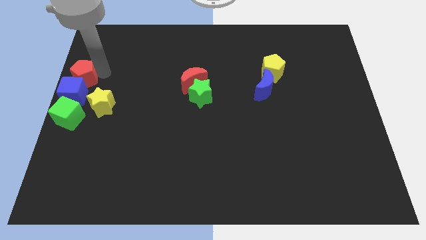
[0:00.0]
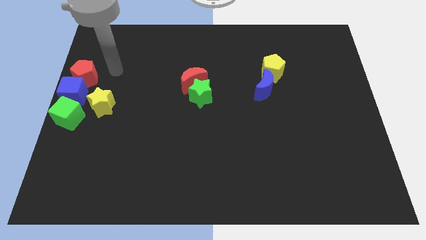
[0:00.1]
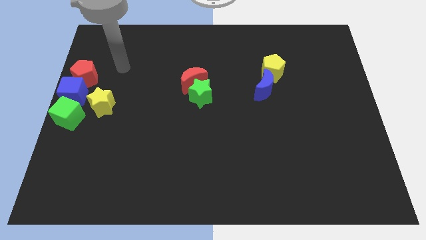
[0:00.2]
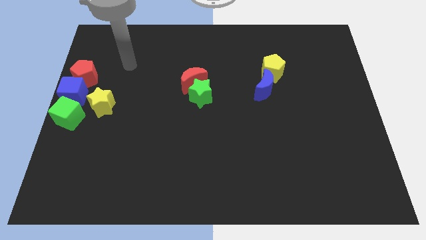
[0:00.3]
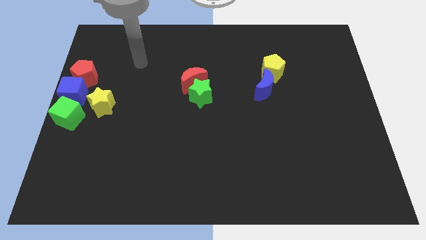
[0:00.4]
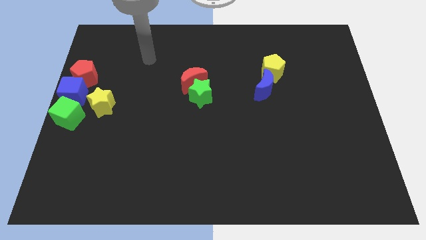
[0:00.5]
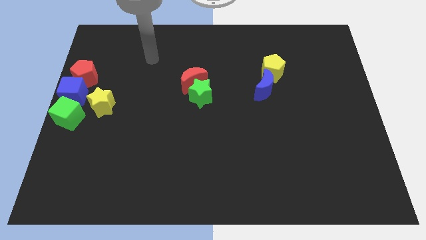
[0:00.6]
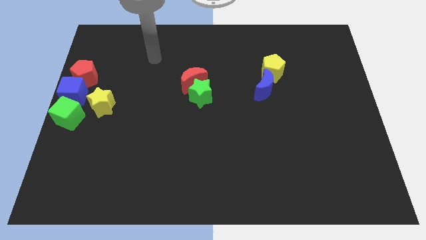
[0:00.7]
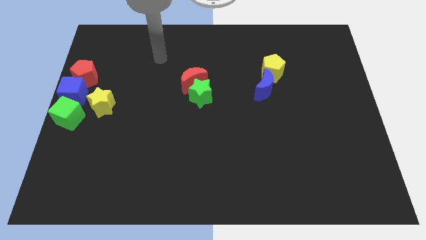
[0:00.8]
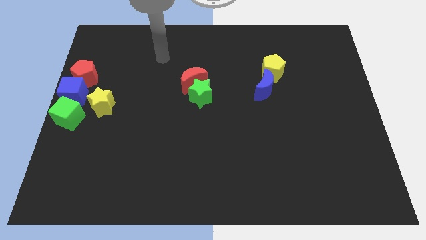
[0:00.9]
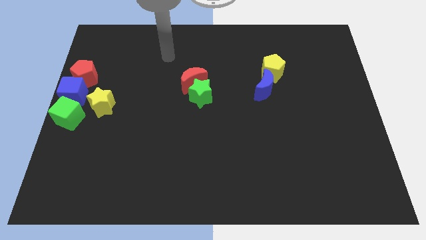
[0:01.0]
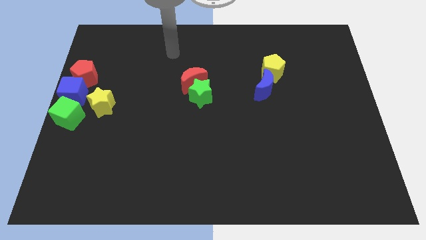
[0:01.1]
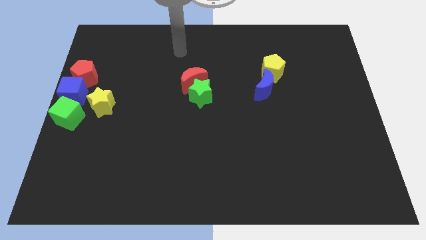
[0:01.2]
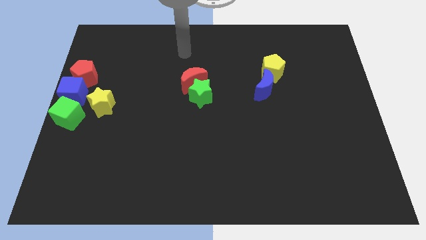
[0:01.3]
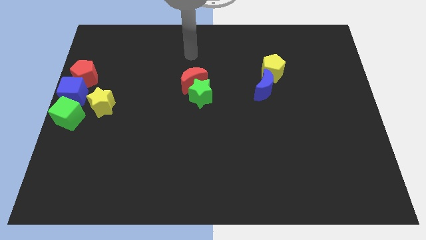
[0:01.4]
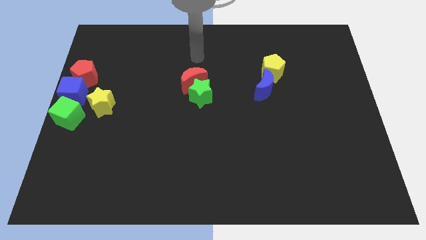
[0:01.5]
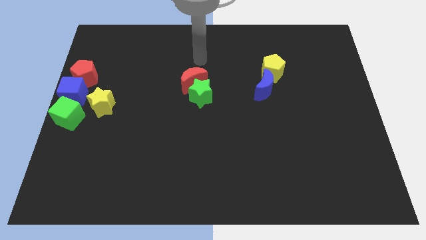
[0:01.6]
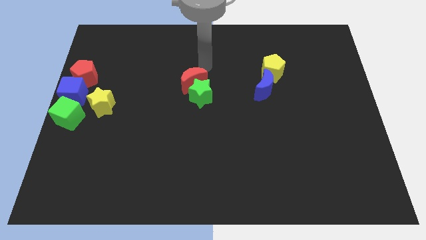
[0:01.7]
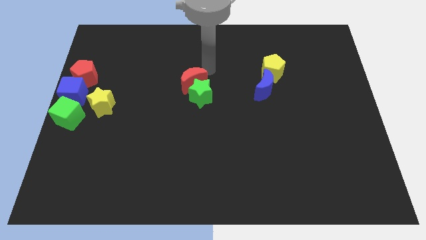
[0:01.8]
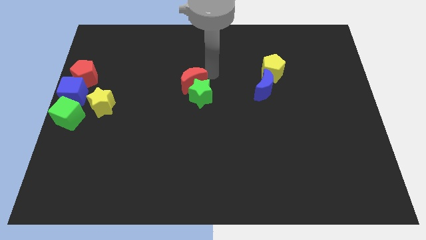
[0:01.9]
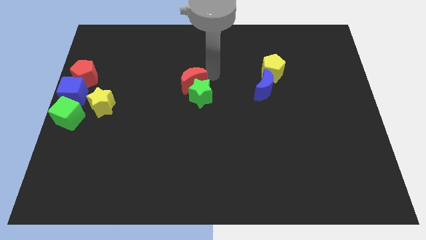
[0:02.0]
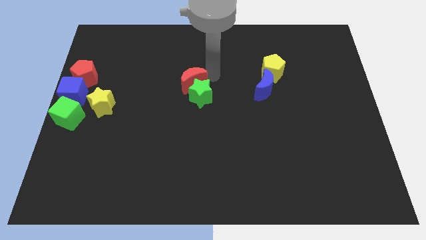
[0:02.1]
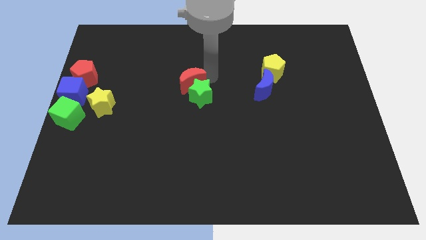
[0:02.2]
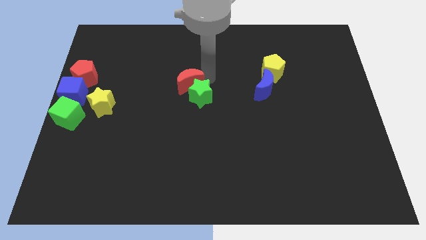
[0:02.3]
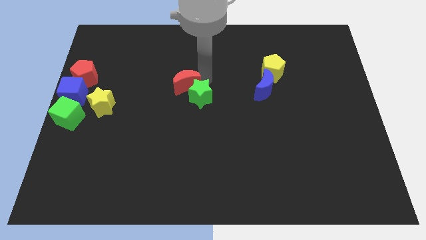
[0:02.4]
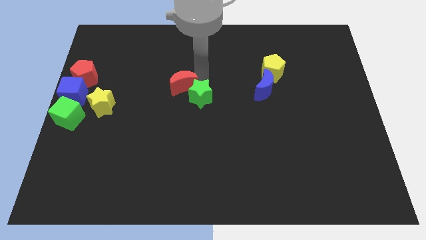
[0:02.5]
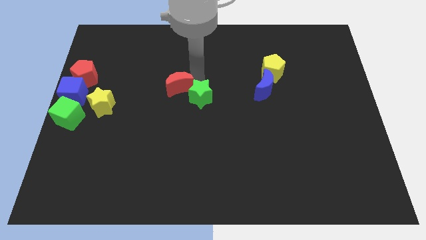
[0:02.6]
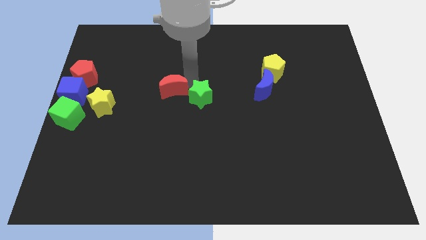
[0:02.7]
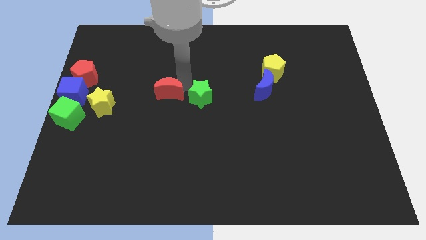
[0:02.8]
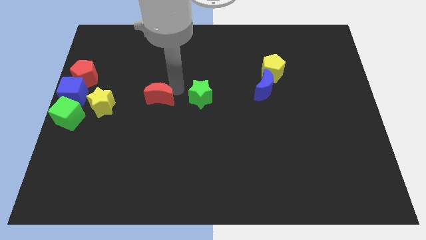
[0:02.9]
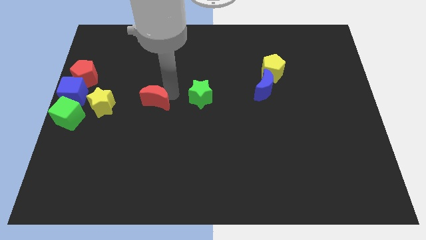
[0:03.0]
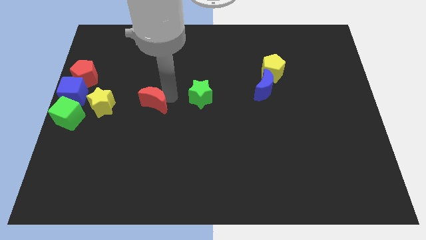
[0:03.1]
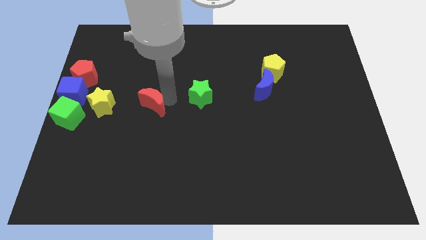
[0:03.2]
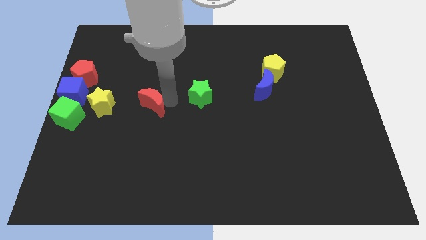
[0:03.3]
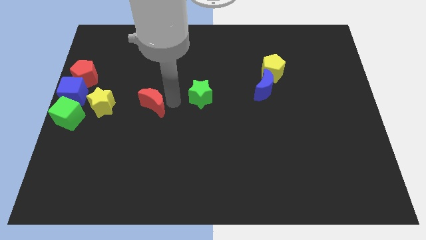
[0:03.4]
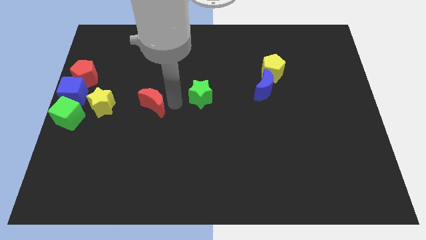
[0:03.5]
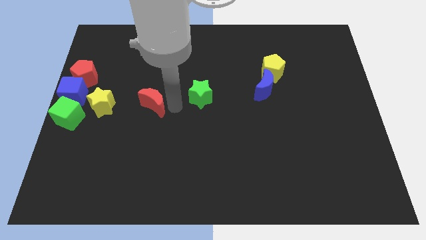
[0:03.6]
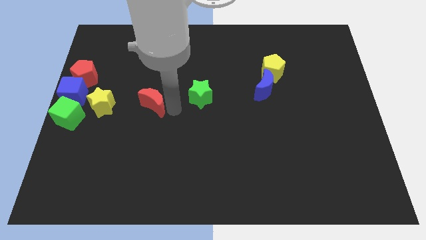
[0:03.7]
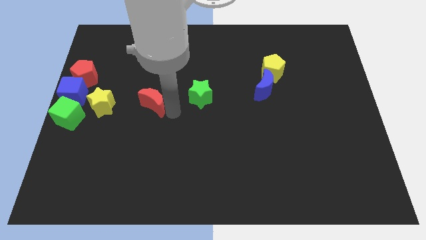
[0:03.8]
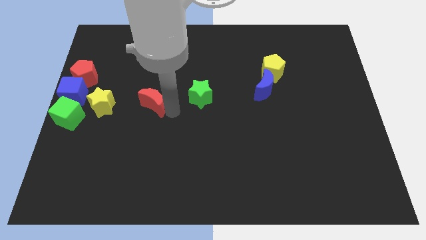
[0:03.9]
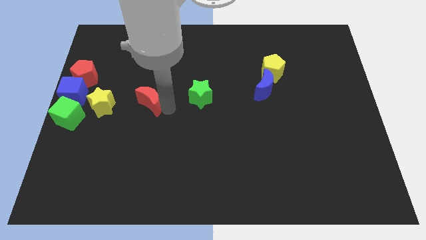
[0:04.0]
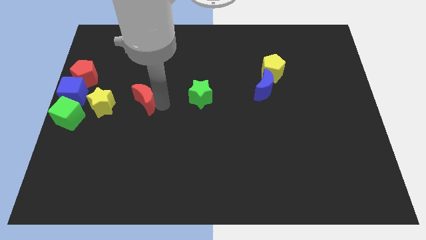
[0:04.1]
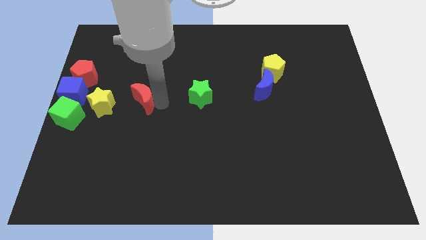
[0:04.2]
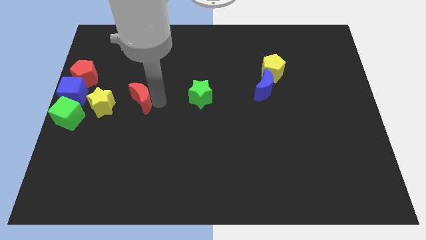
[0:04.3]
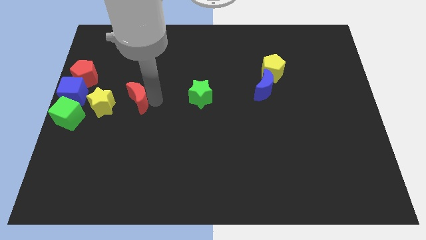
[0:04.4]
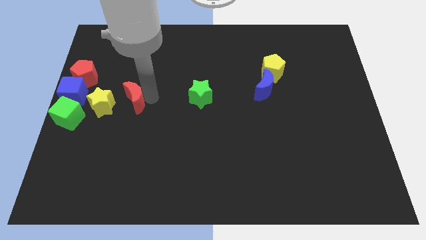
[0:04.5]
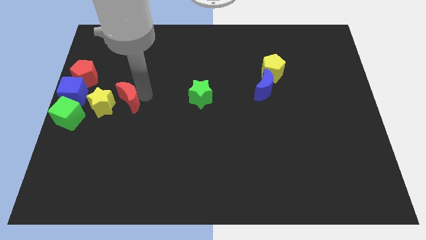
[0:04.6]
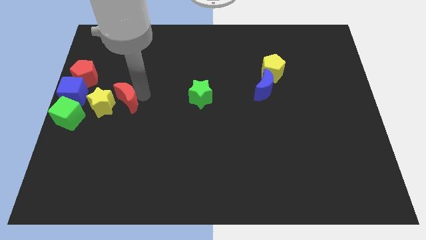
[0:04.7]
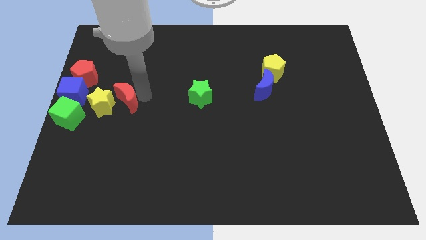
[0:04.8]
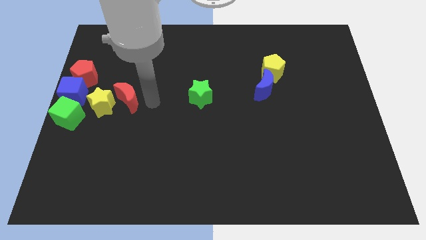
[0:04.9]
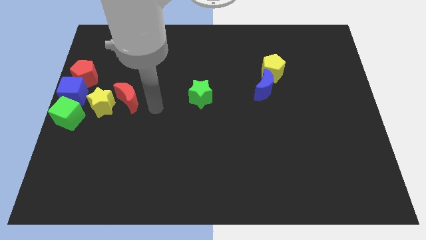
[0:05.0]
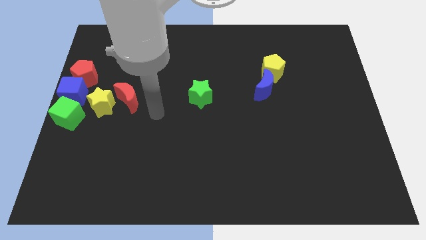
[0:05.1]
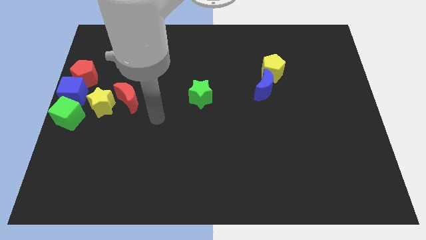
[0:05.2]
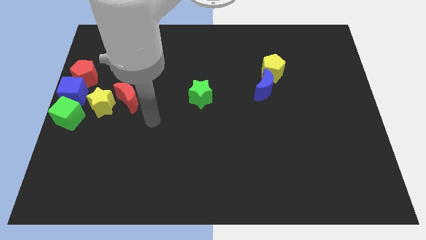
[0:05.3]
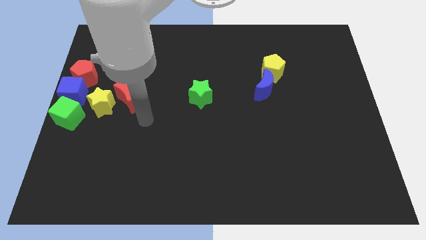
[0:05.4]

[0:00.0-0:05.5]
place the red moon in between the green star and yellow star

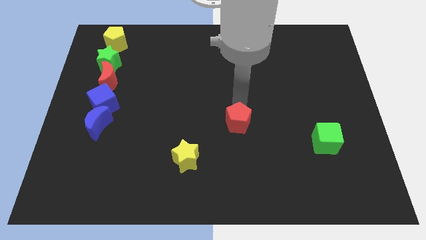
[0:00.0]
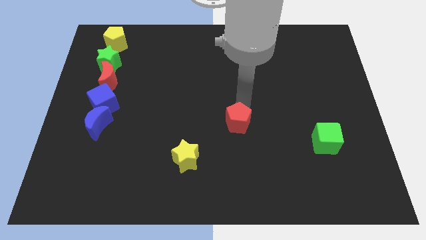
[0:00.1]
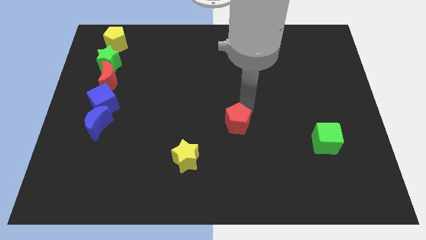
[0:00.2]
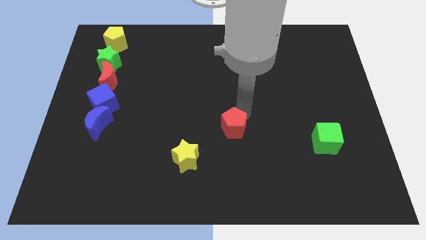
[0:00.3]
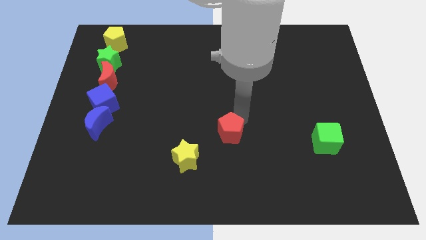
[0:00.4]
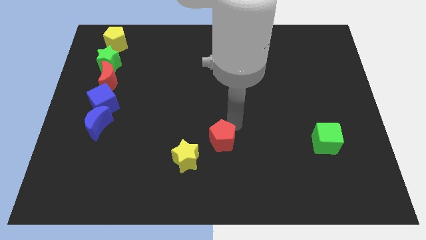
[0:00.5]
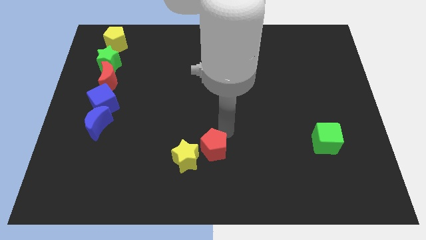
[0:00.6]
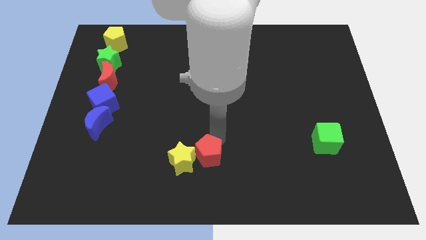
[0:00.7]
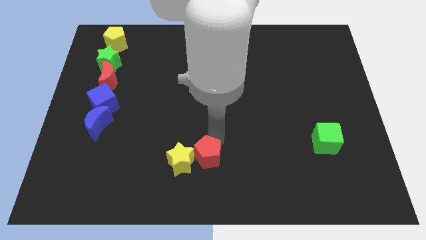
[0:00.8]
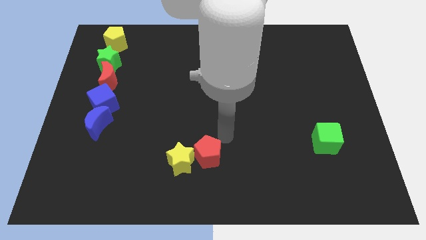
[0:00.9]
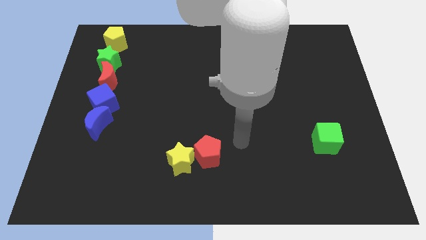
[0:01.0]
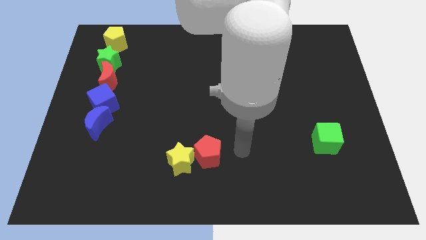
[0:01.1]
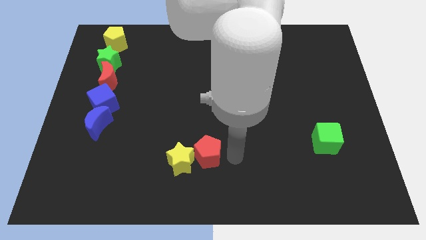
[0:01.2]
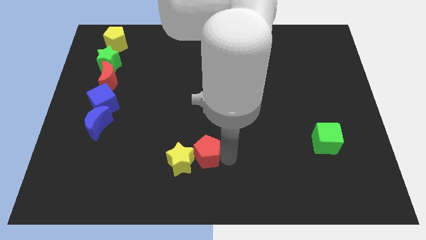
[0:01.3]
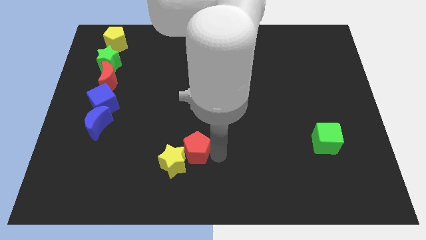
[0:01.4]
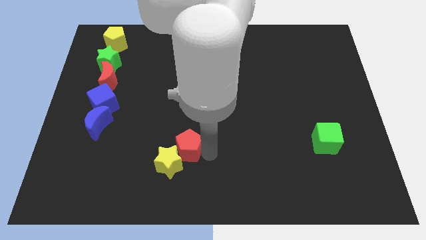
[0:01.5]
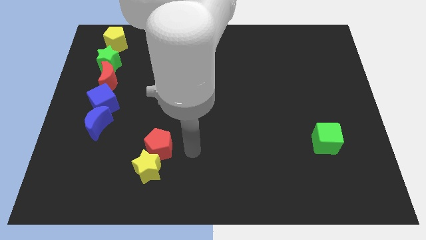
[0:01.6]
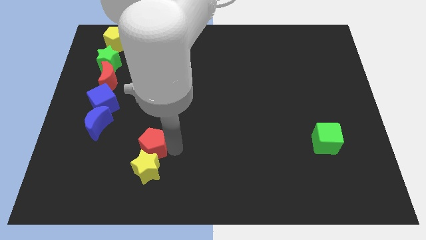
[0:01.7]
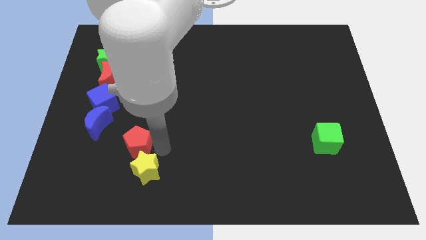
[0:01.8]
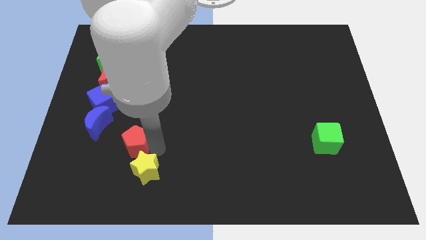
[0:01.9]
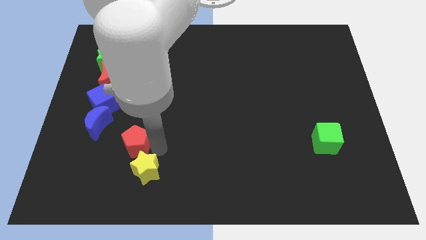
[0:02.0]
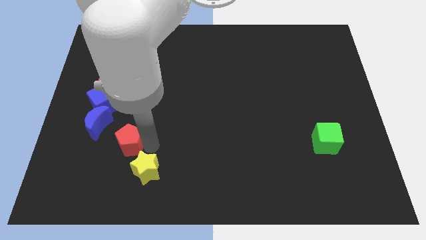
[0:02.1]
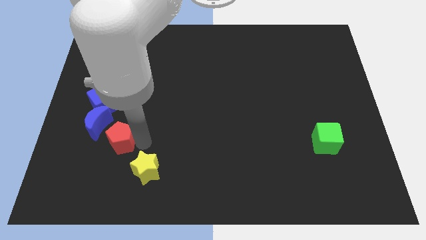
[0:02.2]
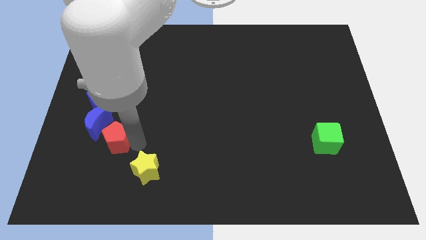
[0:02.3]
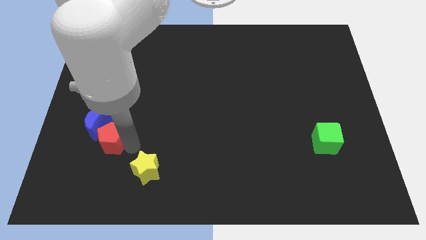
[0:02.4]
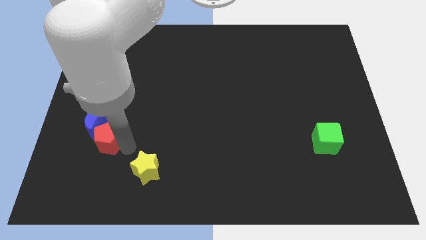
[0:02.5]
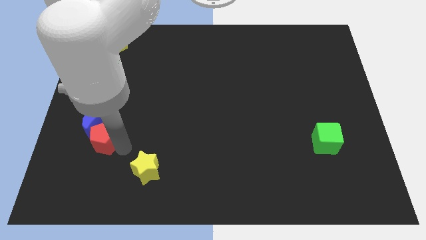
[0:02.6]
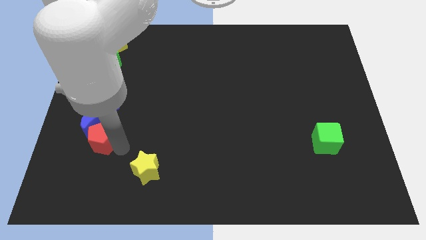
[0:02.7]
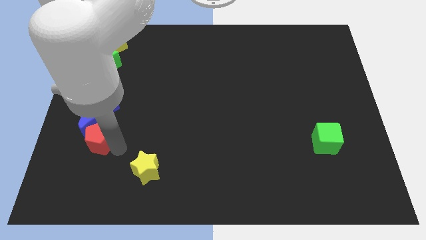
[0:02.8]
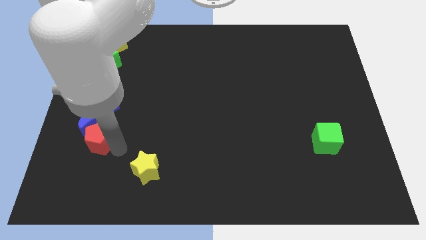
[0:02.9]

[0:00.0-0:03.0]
move the red pentagon into the bottom of the blue crescent

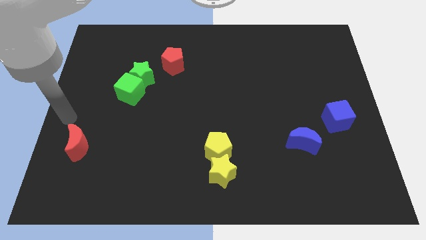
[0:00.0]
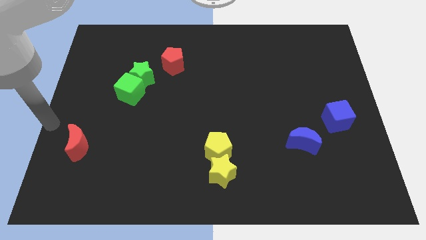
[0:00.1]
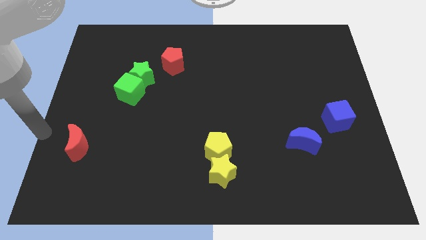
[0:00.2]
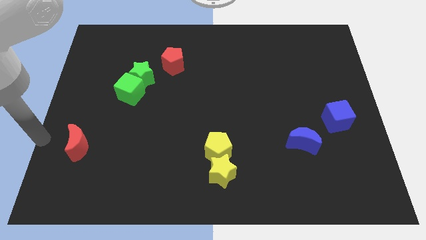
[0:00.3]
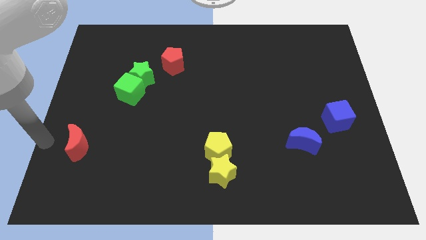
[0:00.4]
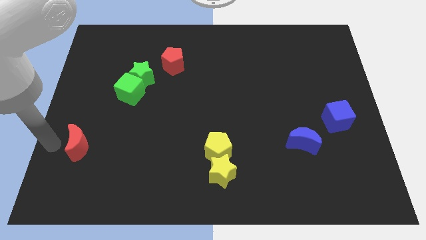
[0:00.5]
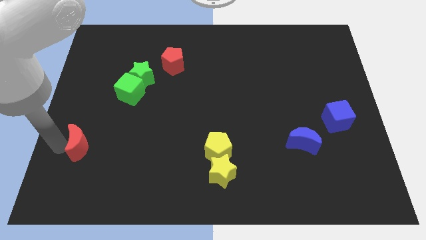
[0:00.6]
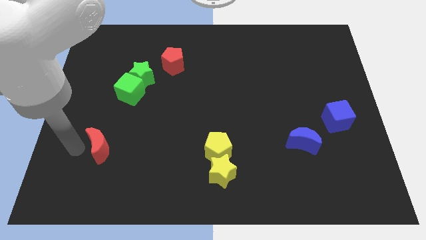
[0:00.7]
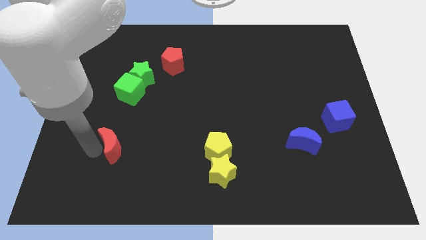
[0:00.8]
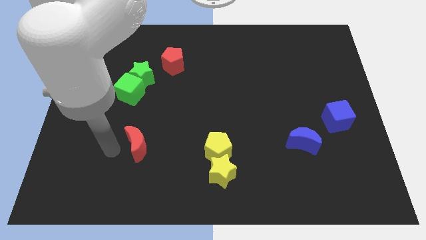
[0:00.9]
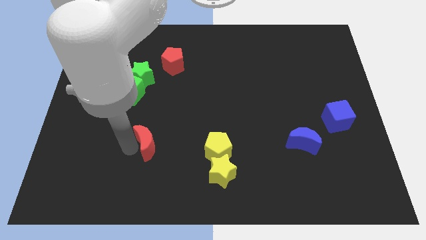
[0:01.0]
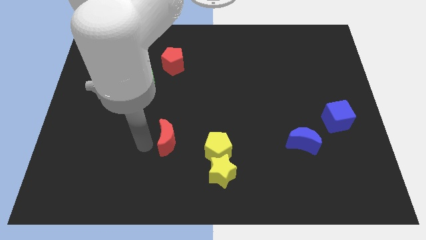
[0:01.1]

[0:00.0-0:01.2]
place red crescent parallel to yellow pentagon
